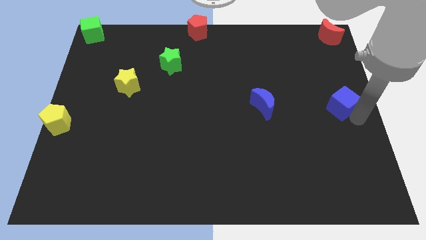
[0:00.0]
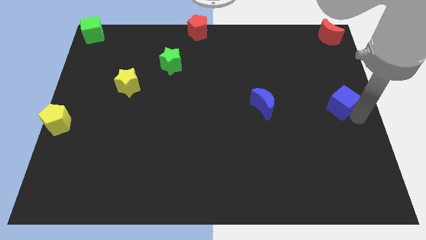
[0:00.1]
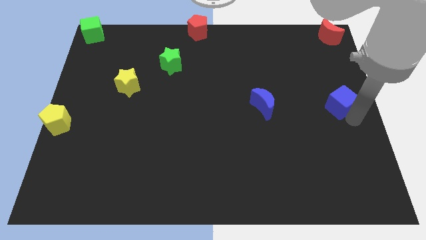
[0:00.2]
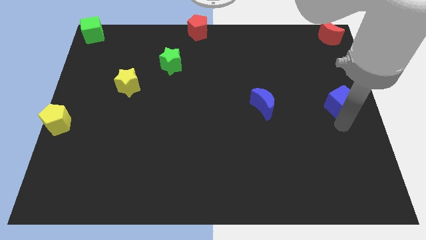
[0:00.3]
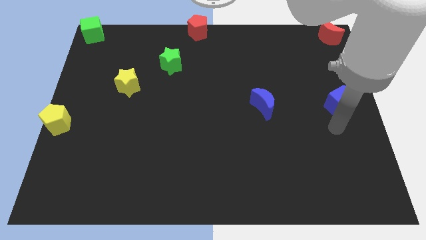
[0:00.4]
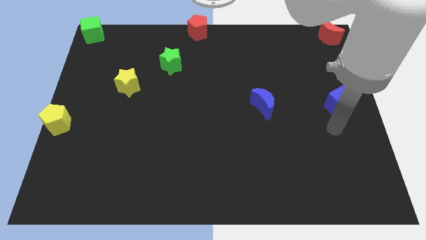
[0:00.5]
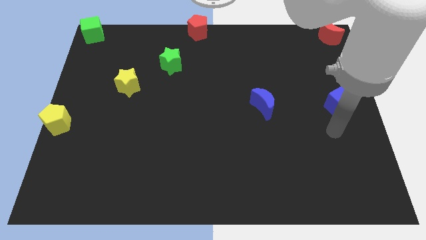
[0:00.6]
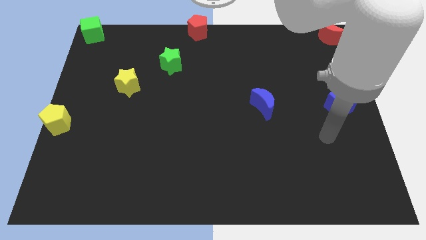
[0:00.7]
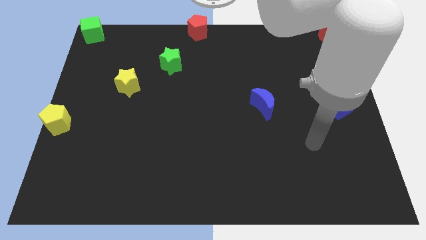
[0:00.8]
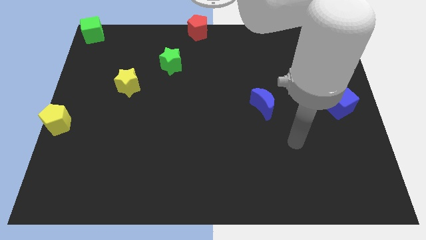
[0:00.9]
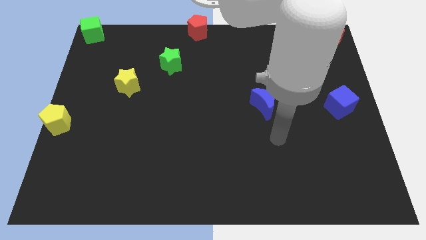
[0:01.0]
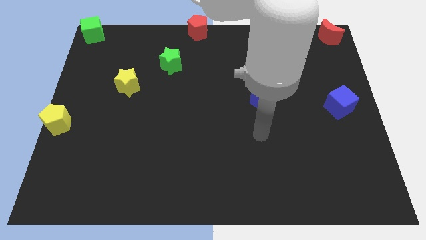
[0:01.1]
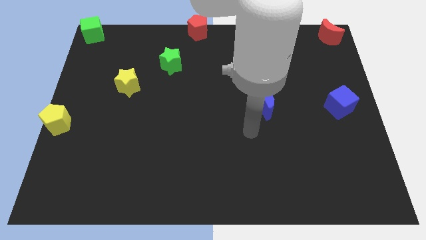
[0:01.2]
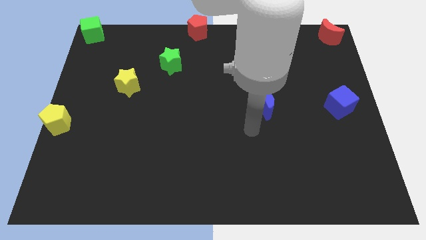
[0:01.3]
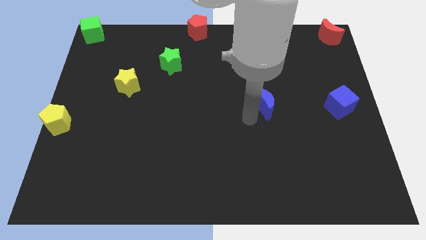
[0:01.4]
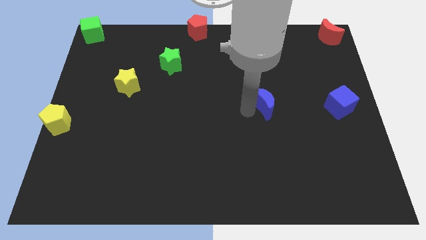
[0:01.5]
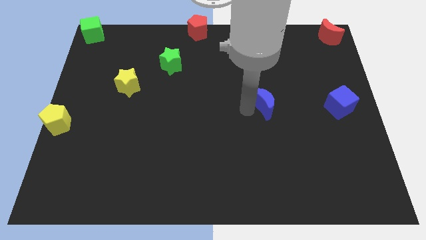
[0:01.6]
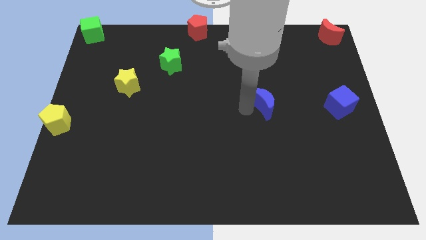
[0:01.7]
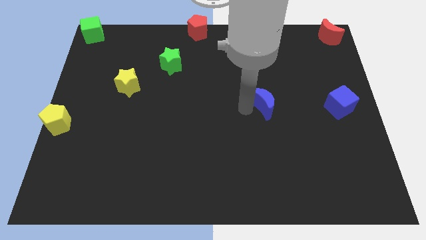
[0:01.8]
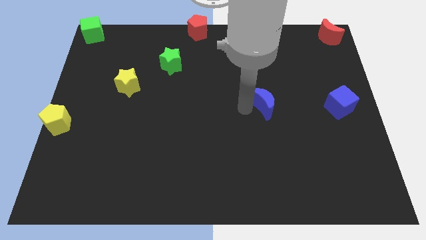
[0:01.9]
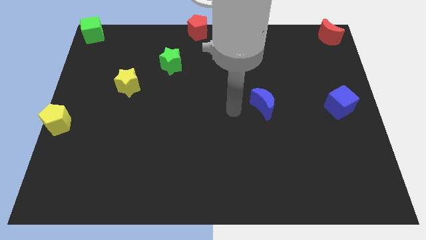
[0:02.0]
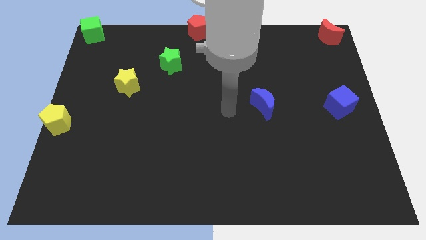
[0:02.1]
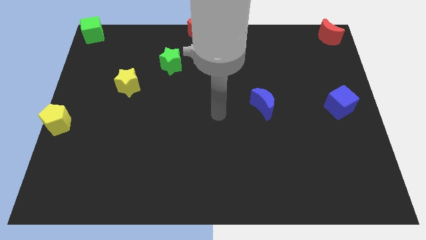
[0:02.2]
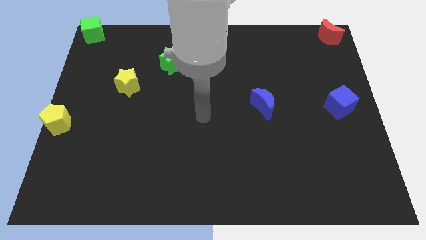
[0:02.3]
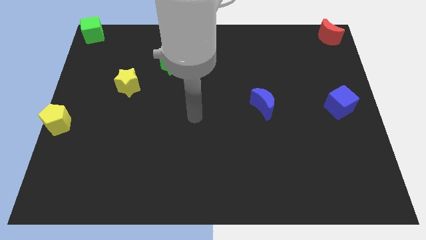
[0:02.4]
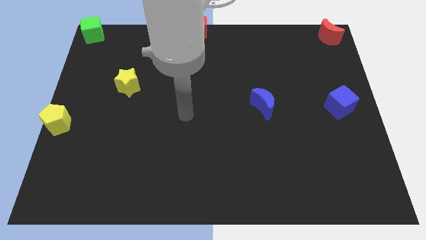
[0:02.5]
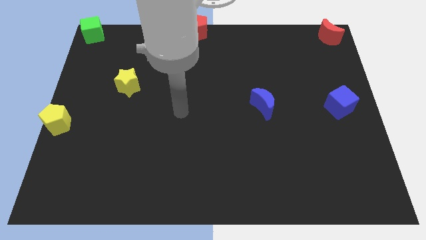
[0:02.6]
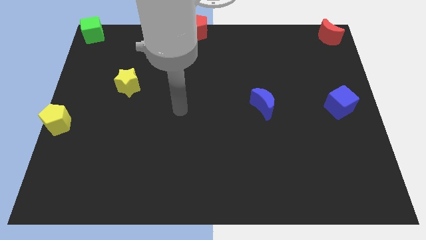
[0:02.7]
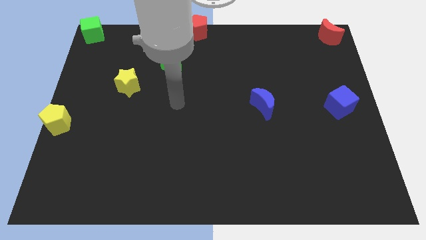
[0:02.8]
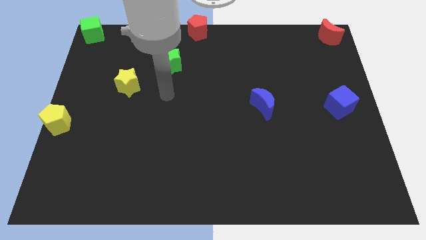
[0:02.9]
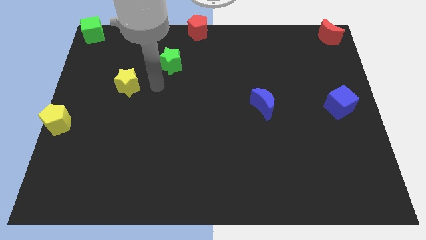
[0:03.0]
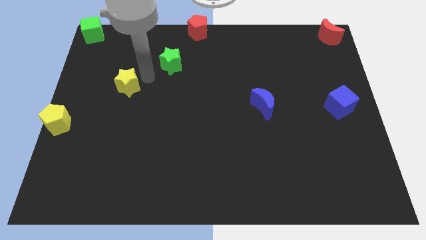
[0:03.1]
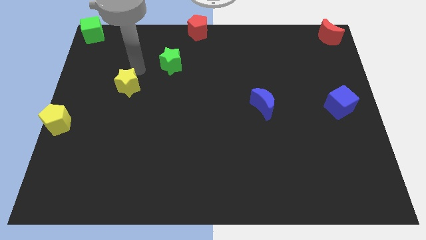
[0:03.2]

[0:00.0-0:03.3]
move your arm in between green star and yellow star

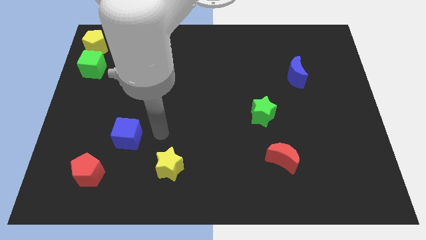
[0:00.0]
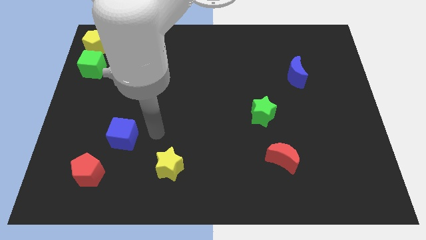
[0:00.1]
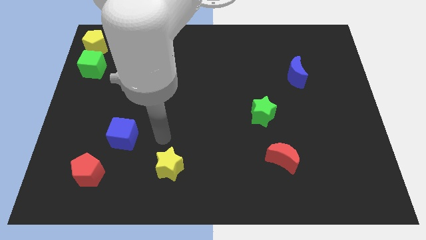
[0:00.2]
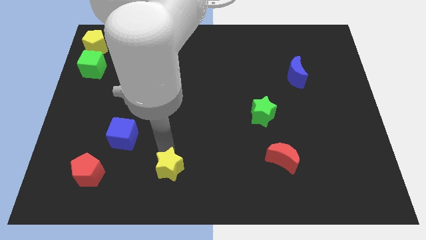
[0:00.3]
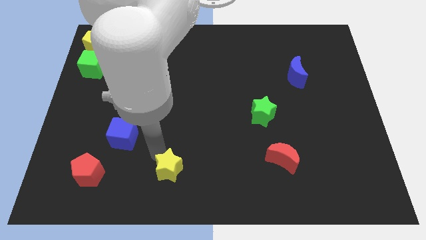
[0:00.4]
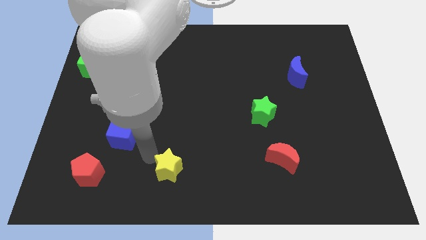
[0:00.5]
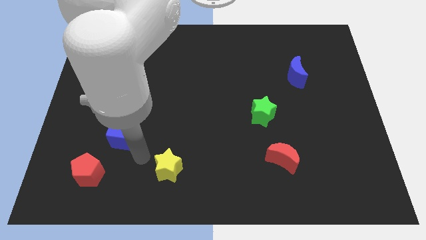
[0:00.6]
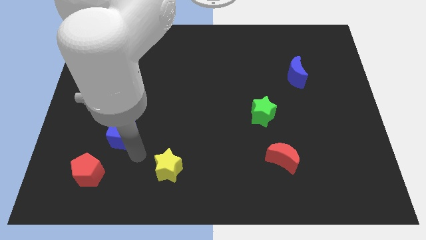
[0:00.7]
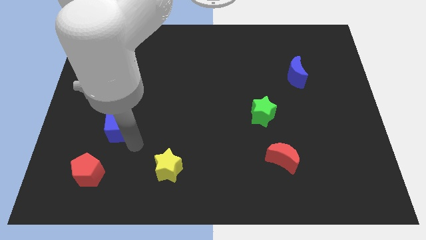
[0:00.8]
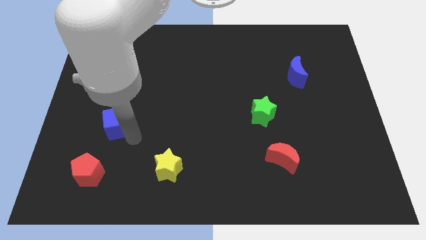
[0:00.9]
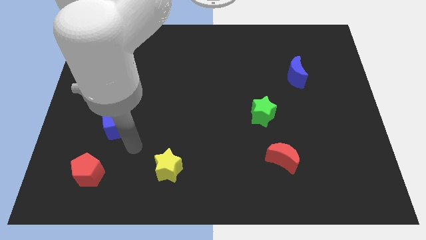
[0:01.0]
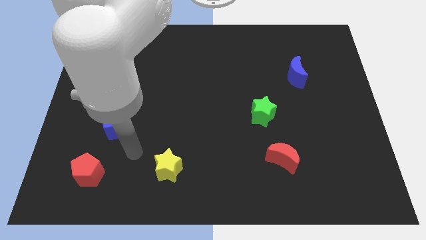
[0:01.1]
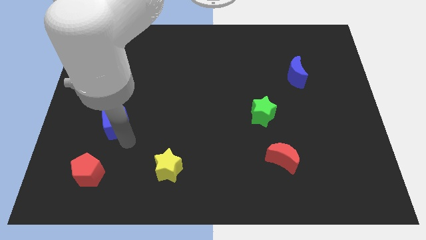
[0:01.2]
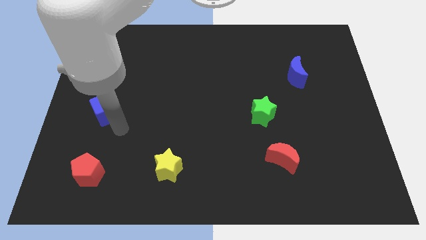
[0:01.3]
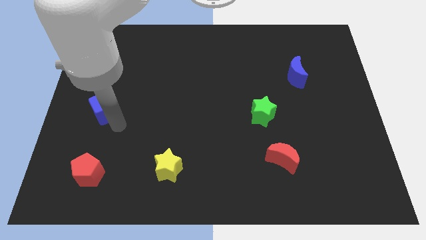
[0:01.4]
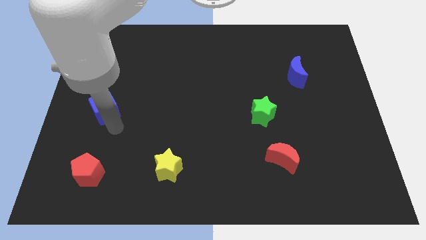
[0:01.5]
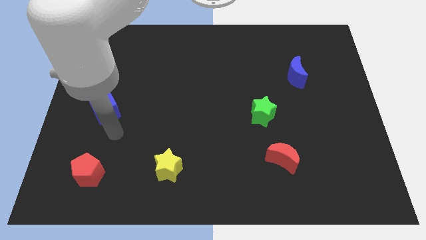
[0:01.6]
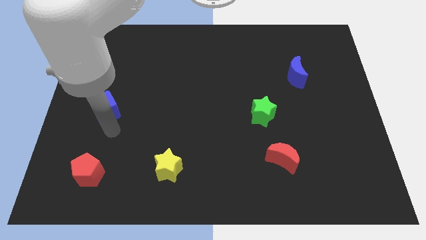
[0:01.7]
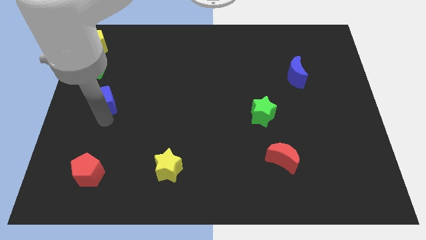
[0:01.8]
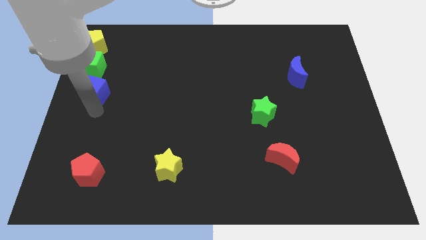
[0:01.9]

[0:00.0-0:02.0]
slide the blue cube vertically above the red pentagon

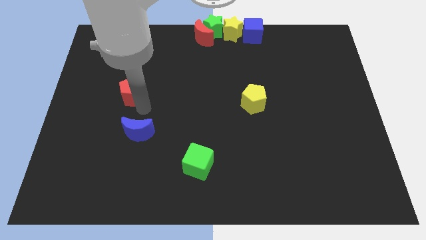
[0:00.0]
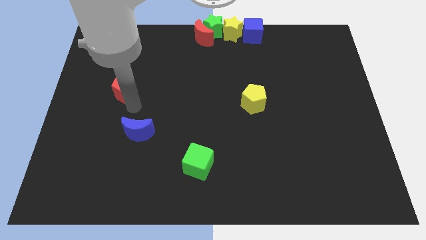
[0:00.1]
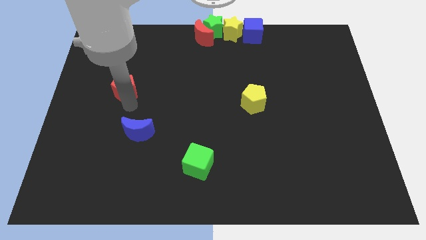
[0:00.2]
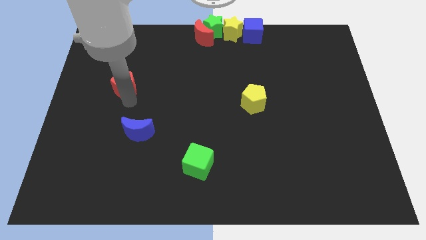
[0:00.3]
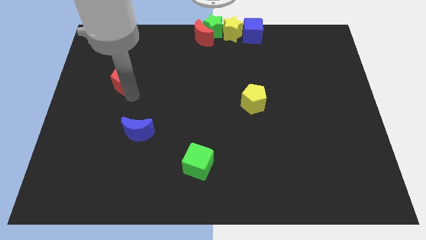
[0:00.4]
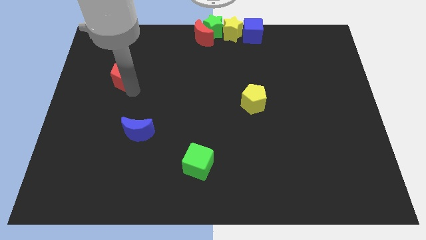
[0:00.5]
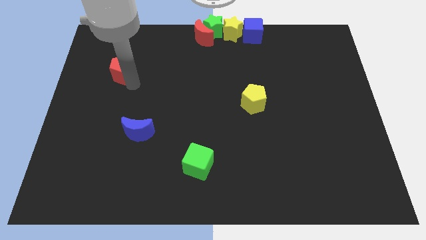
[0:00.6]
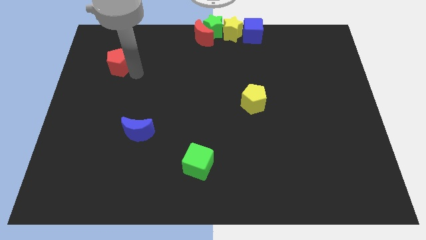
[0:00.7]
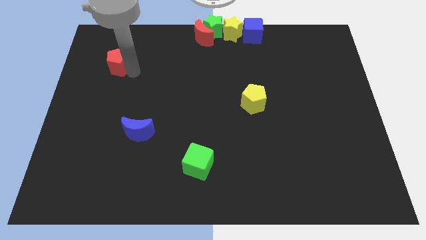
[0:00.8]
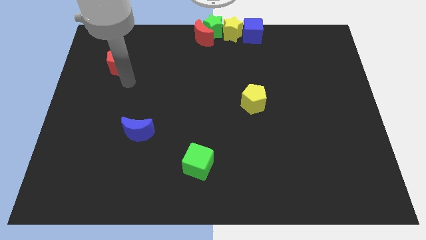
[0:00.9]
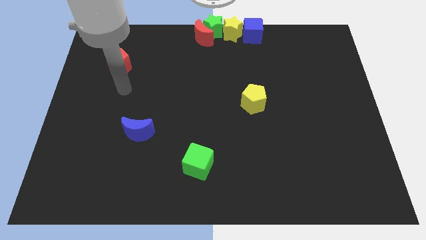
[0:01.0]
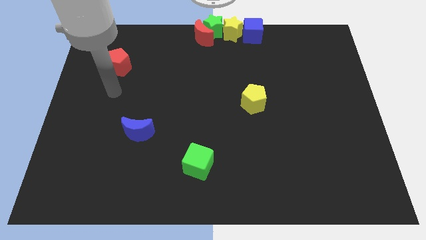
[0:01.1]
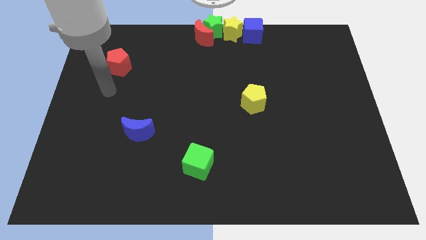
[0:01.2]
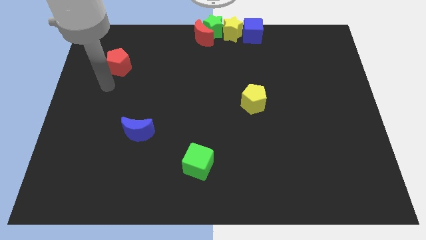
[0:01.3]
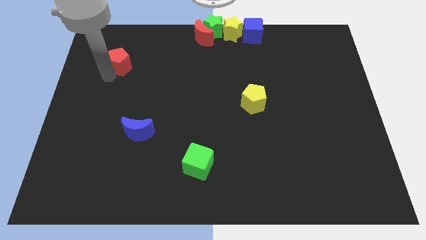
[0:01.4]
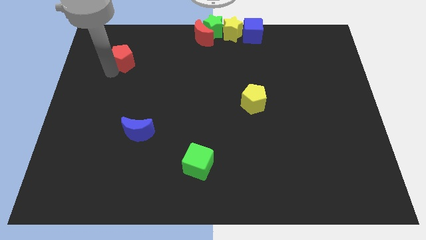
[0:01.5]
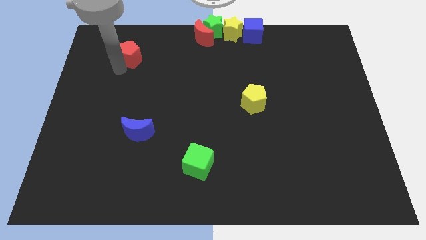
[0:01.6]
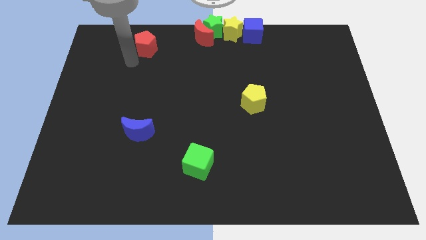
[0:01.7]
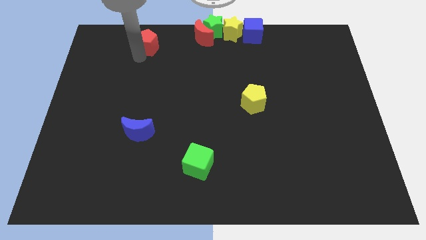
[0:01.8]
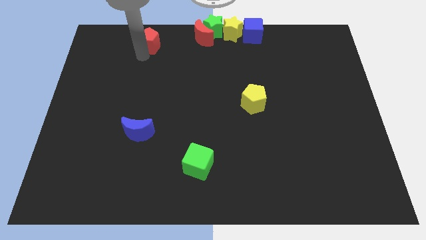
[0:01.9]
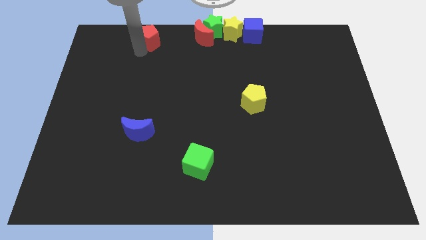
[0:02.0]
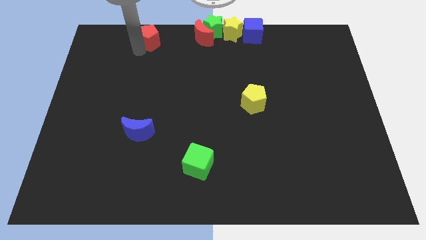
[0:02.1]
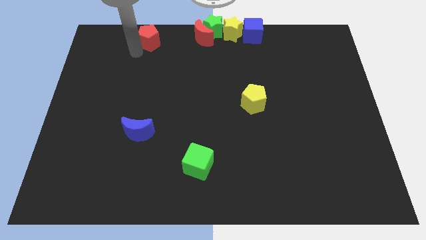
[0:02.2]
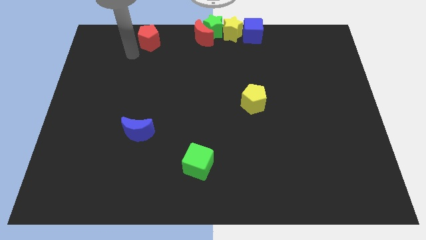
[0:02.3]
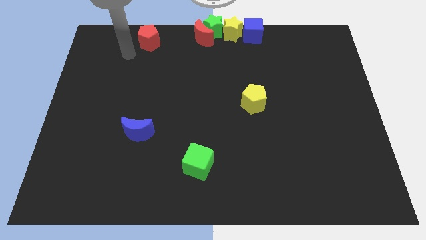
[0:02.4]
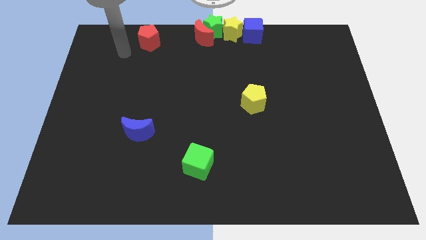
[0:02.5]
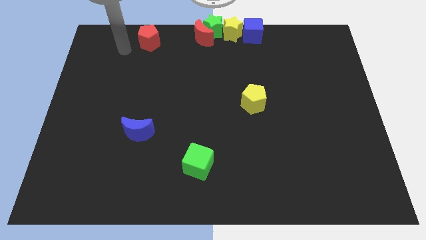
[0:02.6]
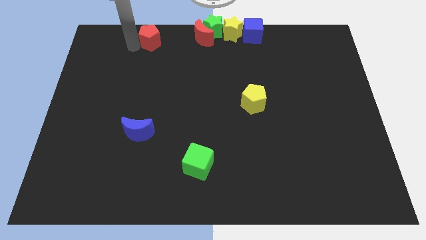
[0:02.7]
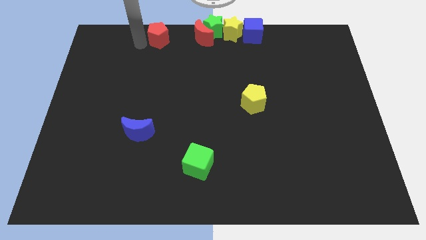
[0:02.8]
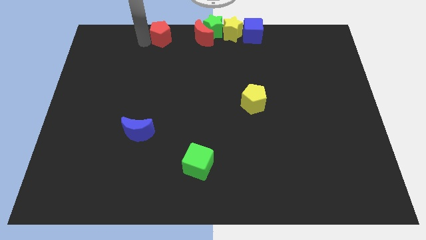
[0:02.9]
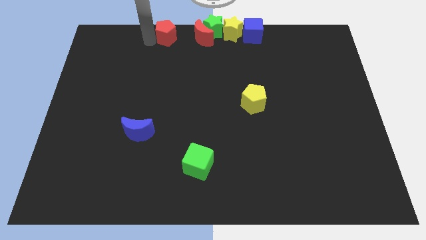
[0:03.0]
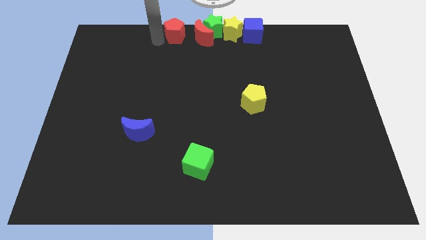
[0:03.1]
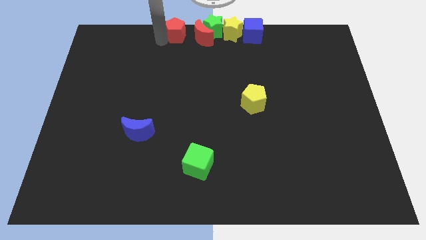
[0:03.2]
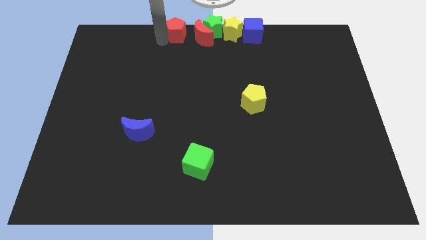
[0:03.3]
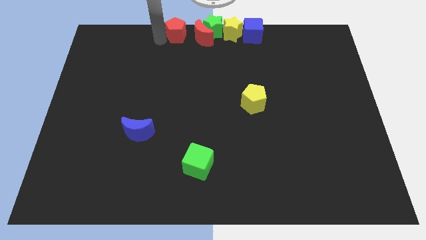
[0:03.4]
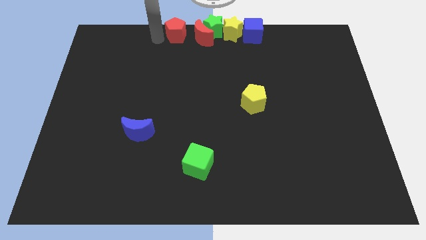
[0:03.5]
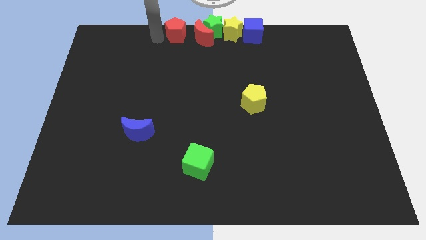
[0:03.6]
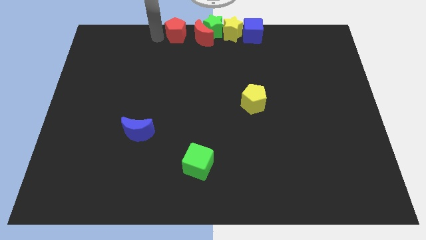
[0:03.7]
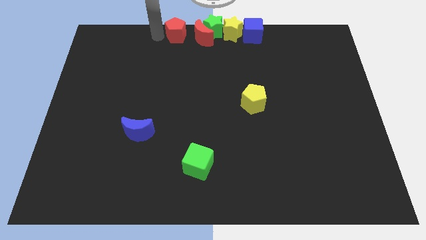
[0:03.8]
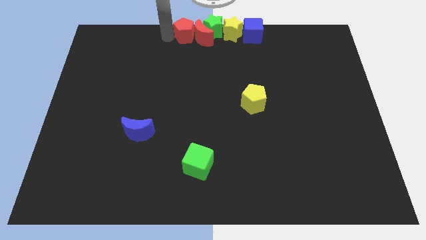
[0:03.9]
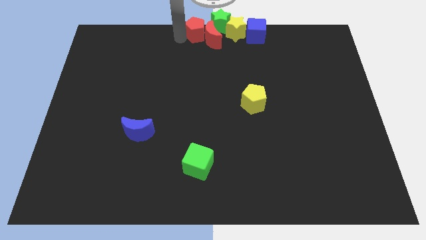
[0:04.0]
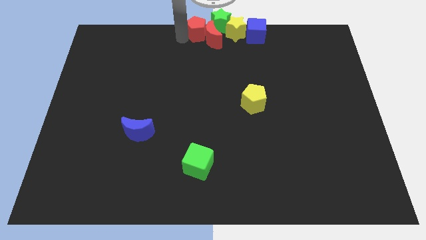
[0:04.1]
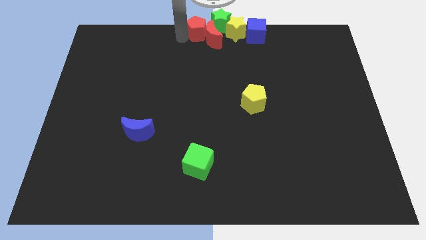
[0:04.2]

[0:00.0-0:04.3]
move the red pentagon left to the red moon
